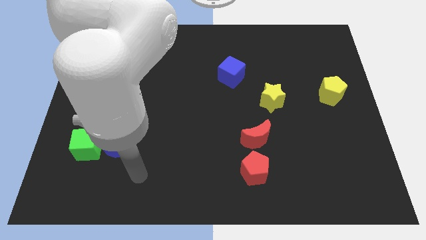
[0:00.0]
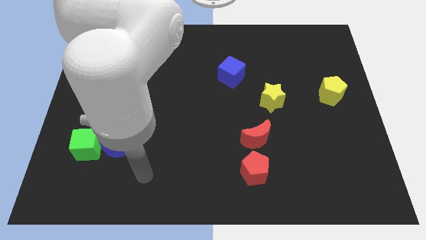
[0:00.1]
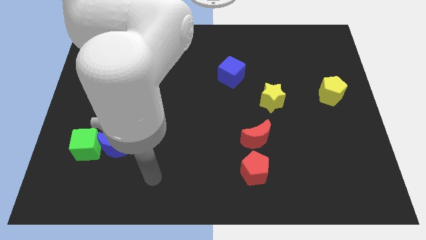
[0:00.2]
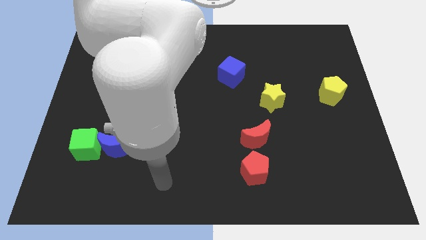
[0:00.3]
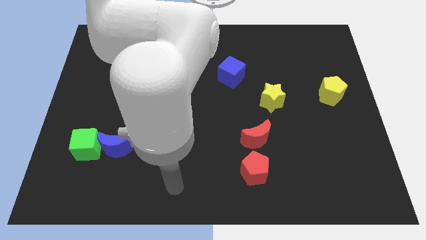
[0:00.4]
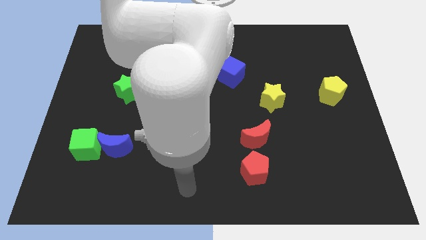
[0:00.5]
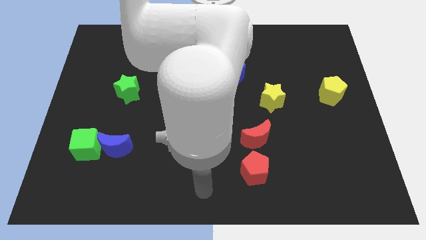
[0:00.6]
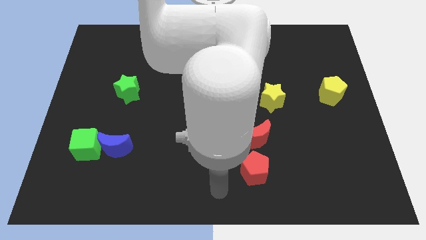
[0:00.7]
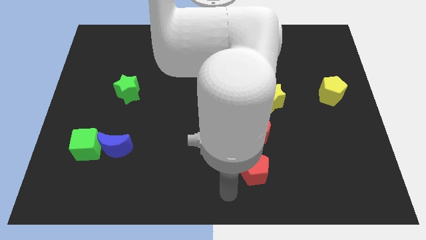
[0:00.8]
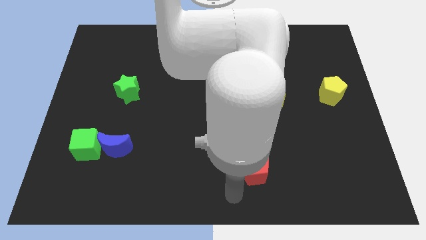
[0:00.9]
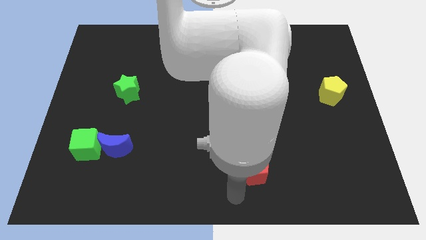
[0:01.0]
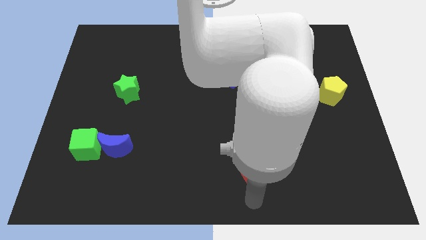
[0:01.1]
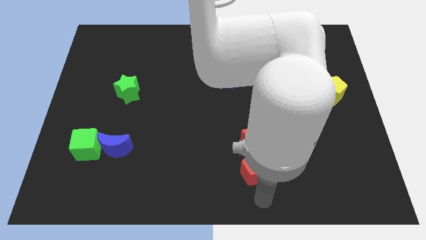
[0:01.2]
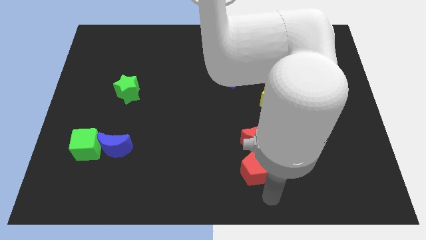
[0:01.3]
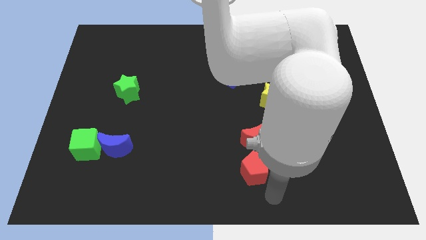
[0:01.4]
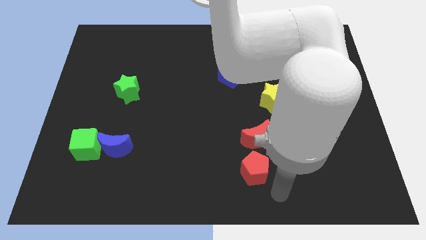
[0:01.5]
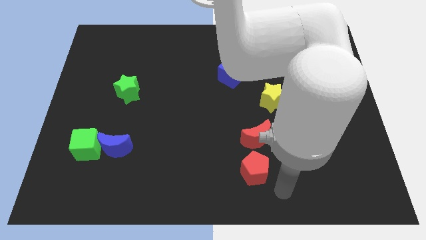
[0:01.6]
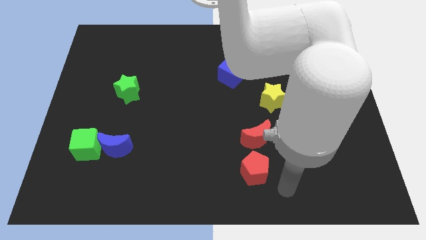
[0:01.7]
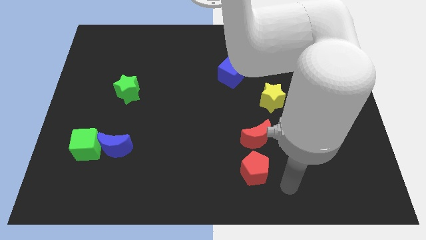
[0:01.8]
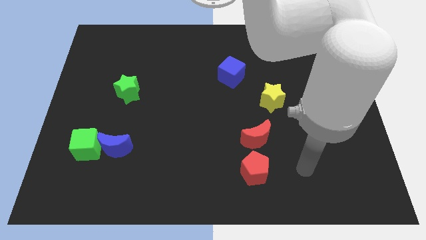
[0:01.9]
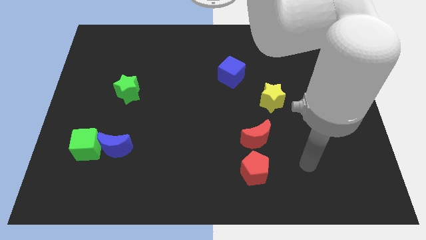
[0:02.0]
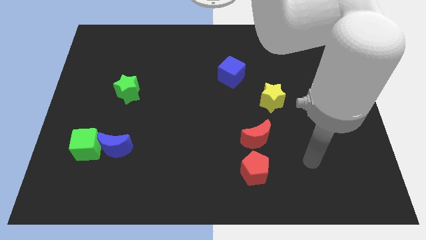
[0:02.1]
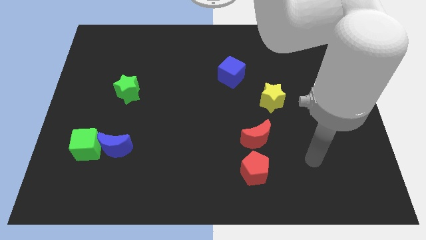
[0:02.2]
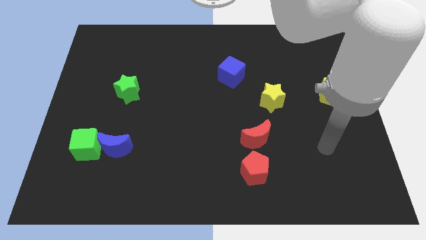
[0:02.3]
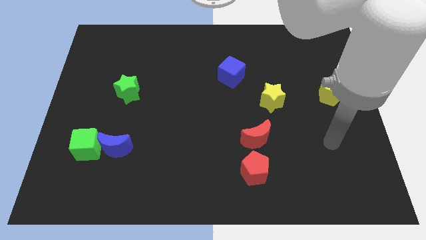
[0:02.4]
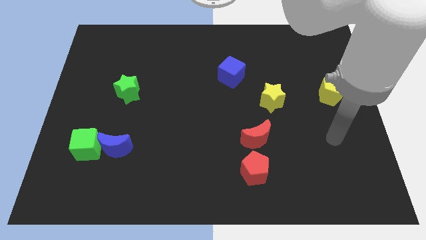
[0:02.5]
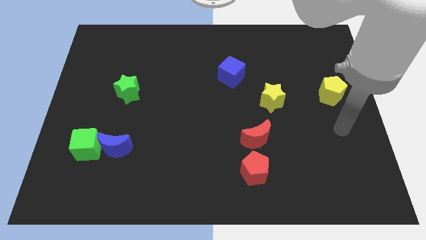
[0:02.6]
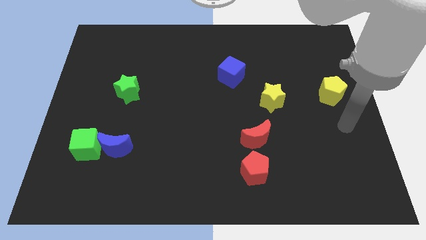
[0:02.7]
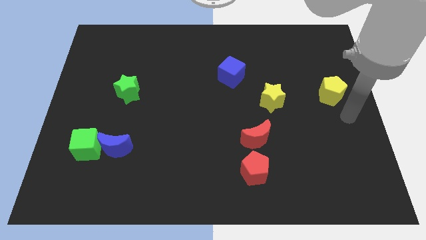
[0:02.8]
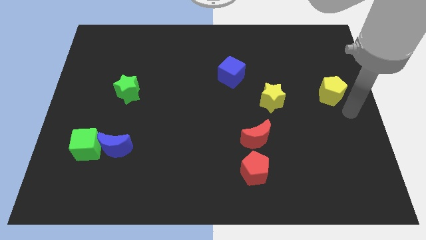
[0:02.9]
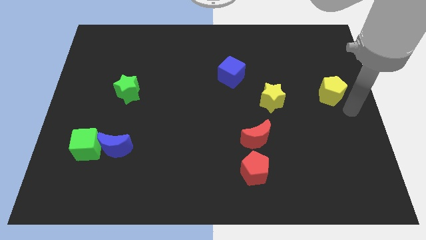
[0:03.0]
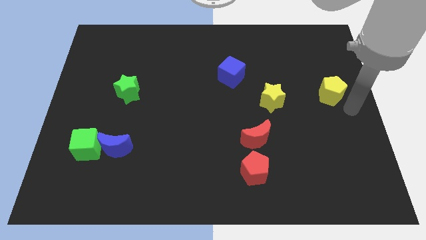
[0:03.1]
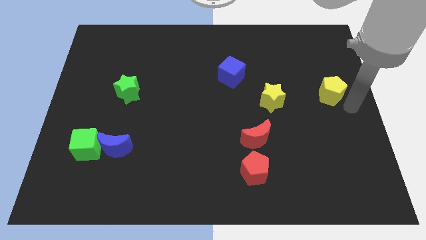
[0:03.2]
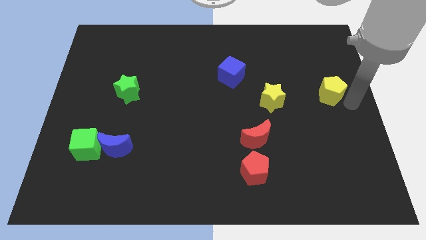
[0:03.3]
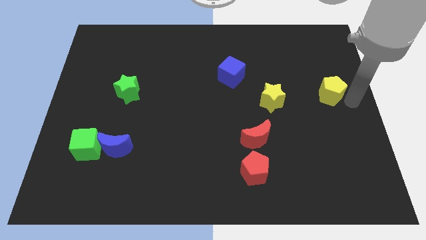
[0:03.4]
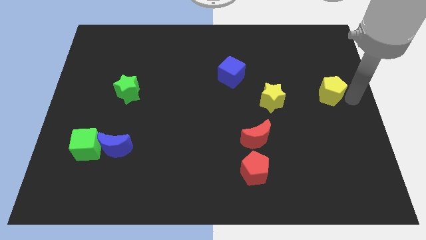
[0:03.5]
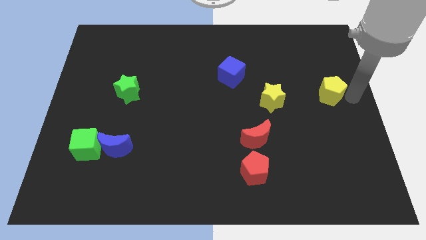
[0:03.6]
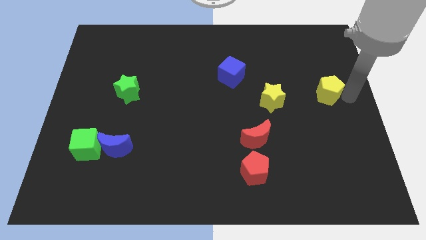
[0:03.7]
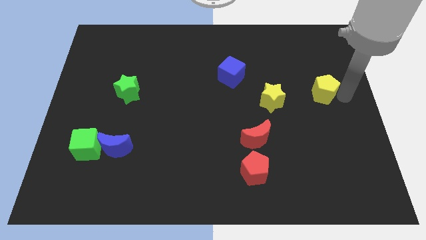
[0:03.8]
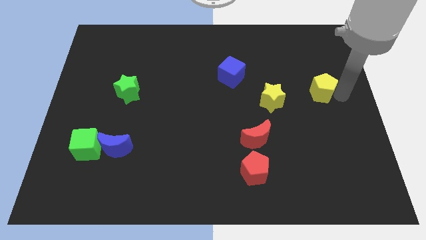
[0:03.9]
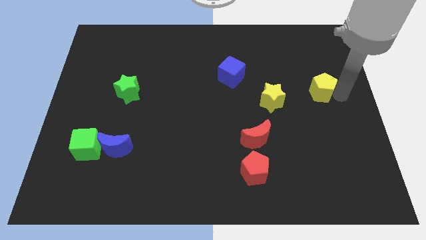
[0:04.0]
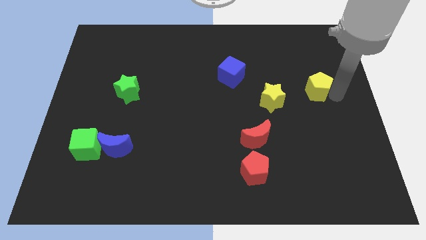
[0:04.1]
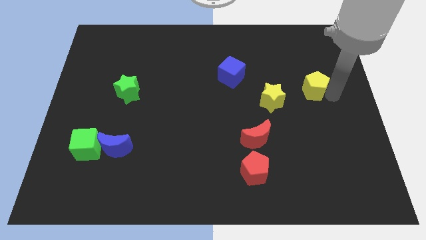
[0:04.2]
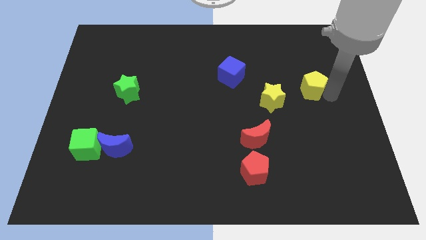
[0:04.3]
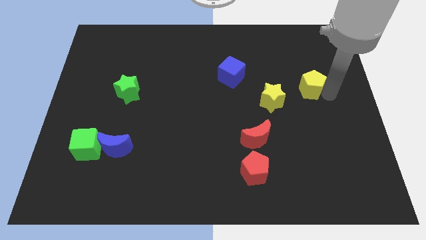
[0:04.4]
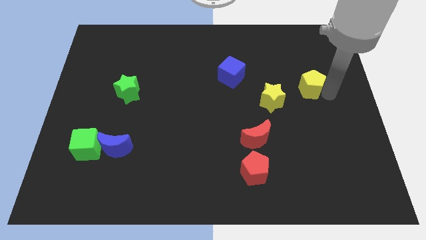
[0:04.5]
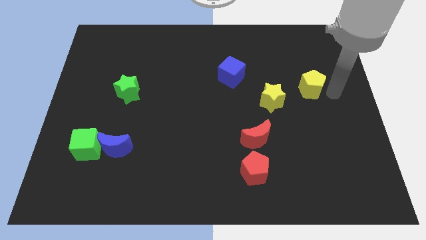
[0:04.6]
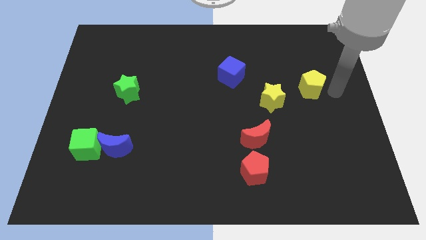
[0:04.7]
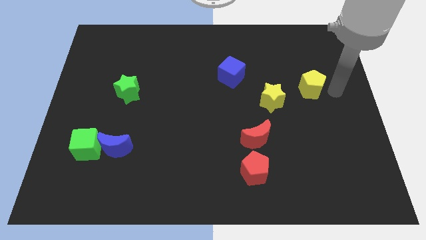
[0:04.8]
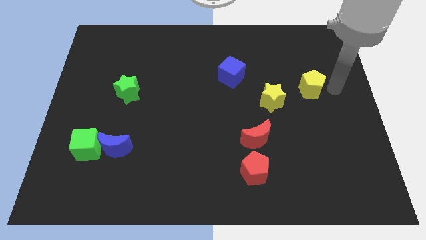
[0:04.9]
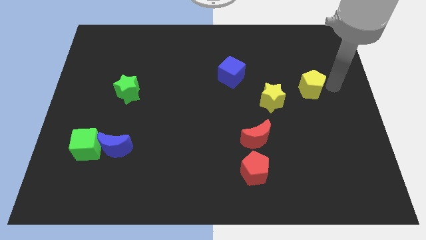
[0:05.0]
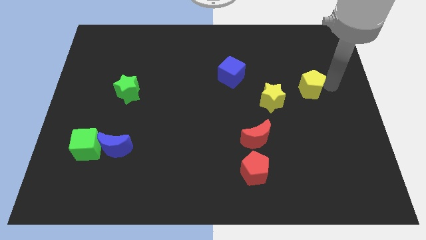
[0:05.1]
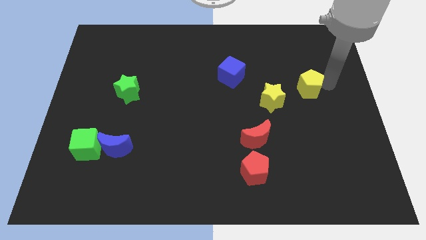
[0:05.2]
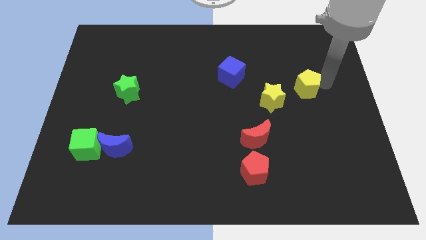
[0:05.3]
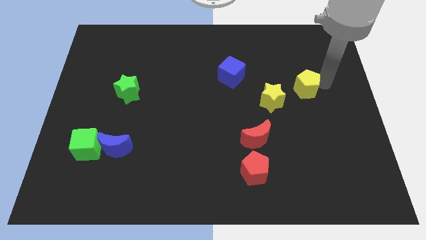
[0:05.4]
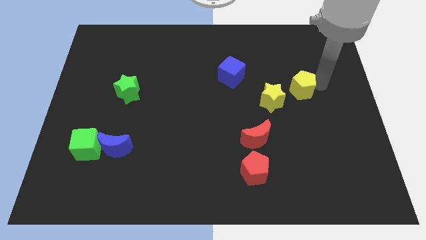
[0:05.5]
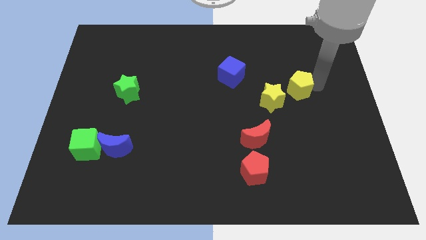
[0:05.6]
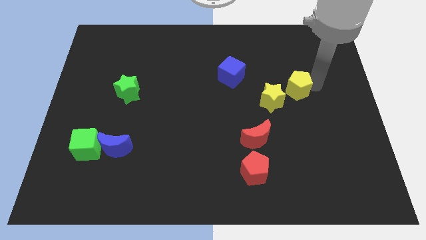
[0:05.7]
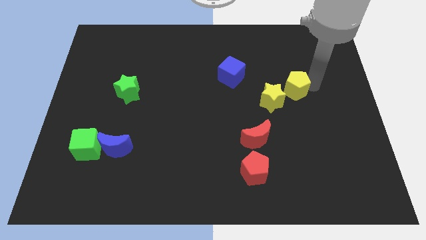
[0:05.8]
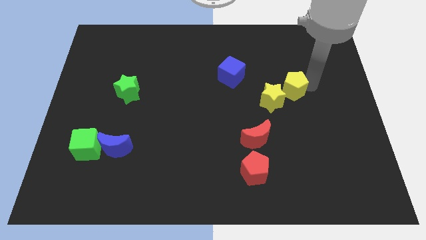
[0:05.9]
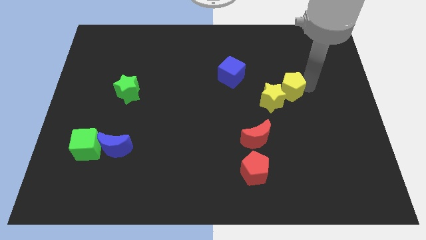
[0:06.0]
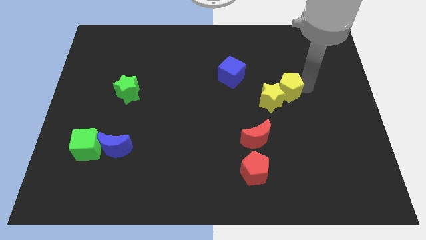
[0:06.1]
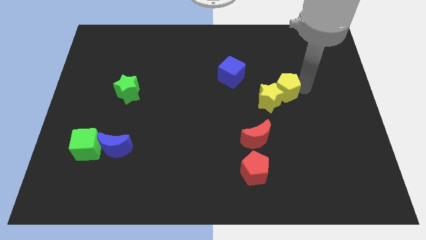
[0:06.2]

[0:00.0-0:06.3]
push the yellow pentagon to the yellow star

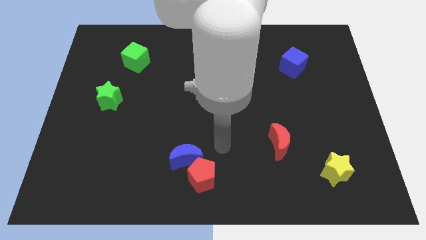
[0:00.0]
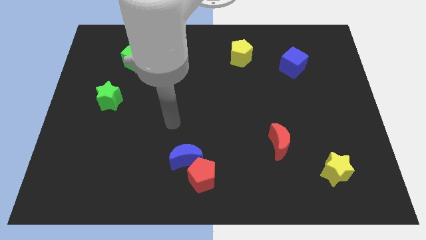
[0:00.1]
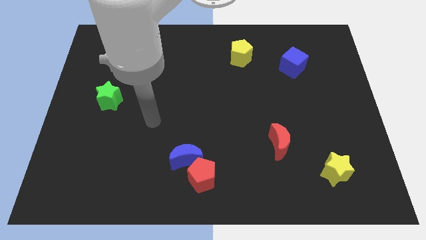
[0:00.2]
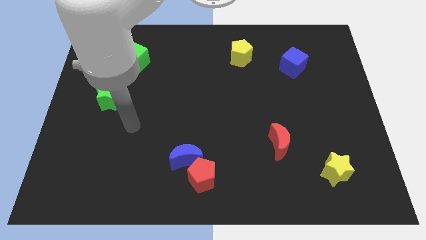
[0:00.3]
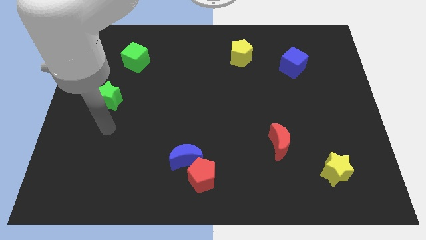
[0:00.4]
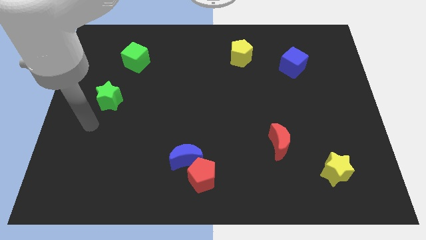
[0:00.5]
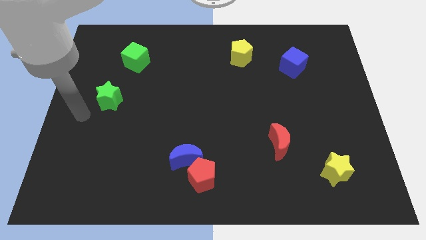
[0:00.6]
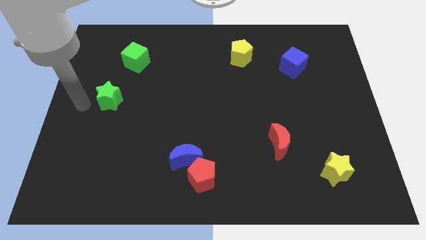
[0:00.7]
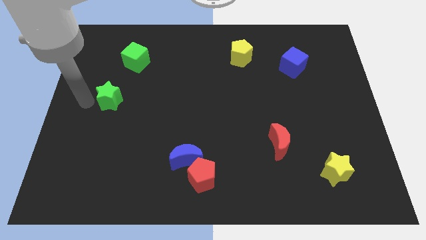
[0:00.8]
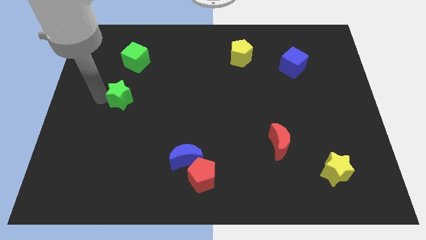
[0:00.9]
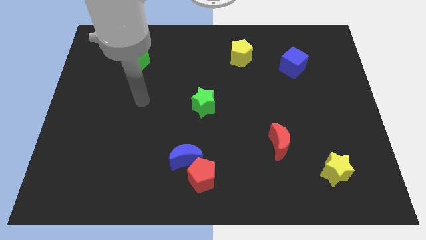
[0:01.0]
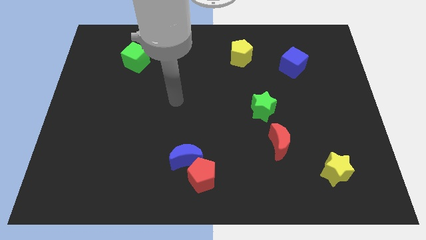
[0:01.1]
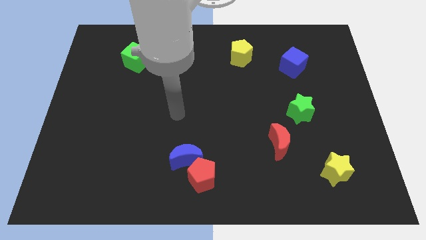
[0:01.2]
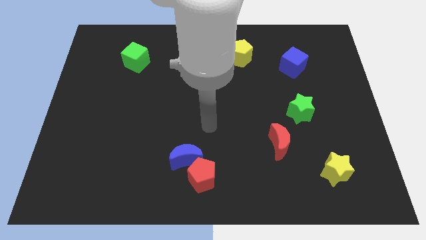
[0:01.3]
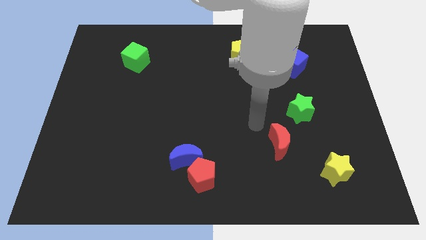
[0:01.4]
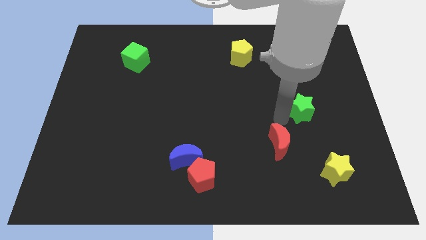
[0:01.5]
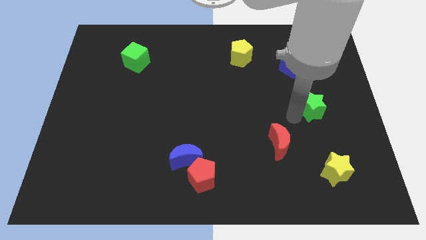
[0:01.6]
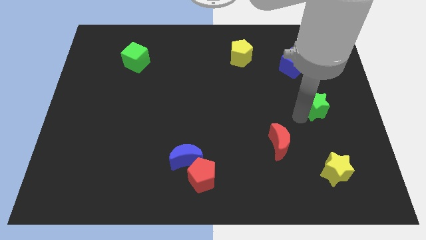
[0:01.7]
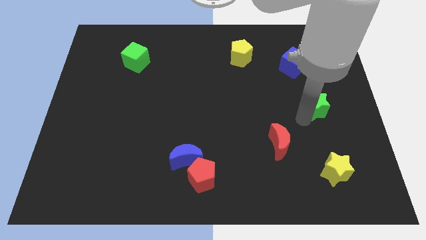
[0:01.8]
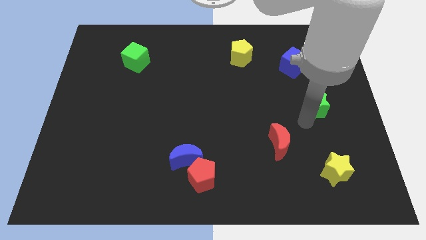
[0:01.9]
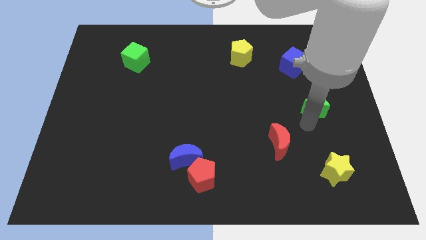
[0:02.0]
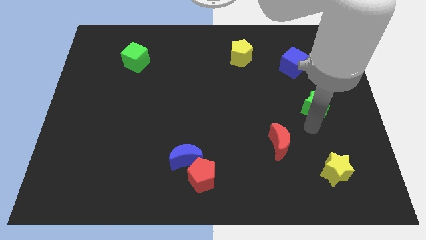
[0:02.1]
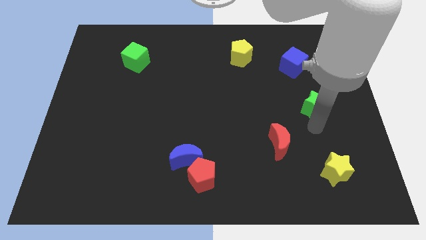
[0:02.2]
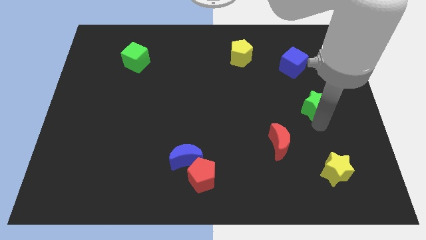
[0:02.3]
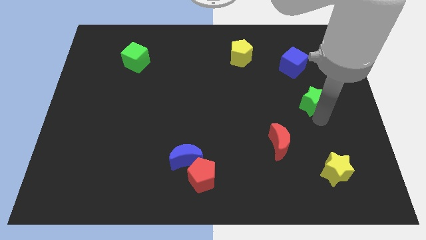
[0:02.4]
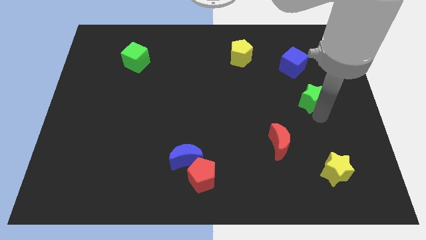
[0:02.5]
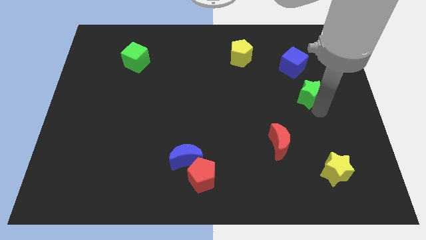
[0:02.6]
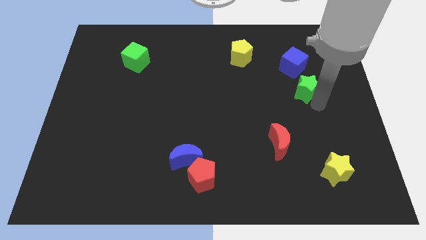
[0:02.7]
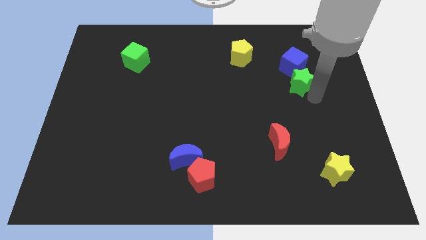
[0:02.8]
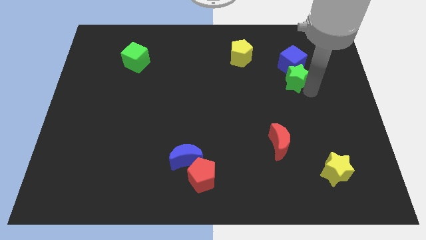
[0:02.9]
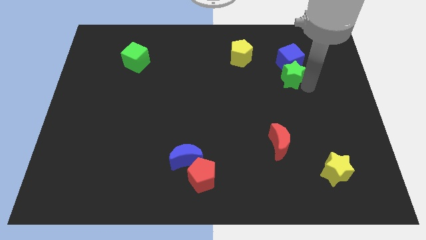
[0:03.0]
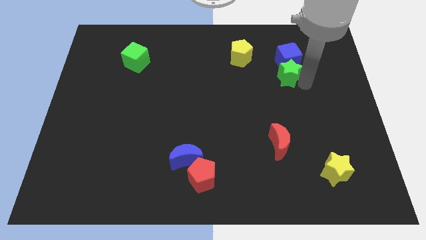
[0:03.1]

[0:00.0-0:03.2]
push the green star towards the blue cube
